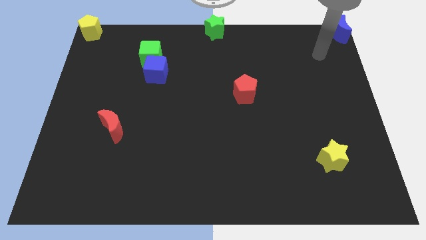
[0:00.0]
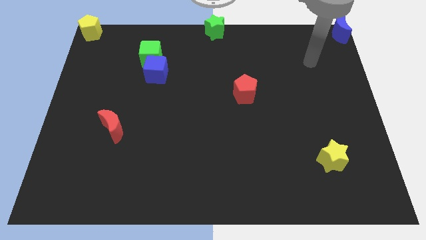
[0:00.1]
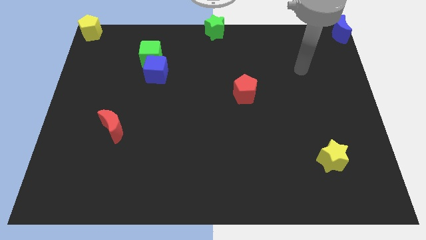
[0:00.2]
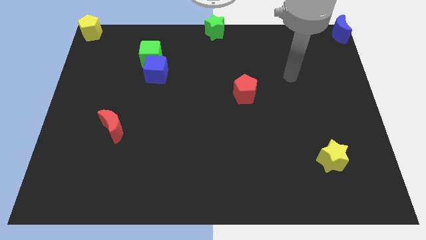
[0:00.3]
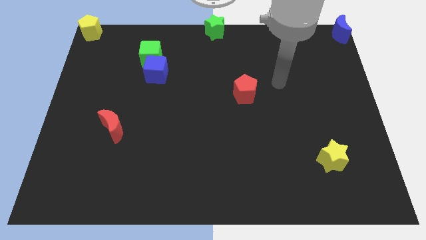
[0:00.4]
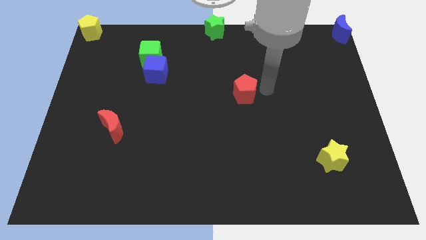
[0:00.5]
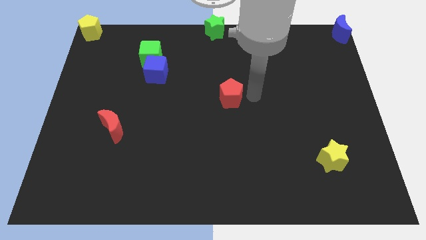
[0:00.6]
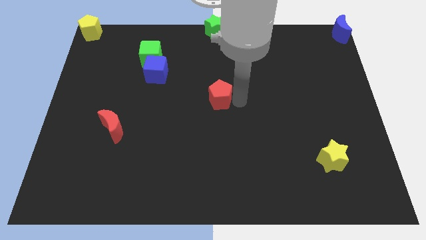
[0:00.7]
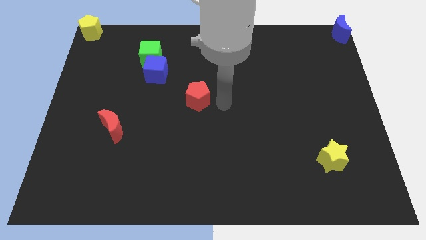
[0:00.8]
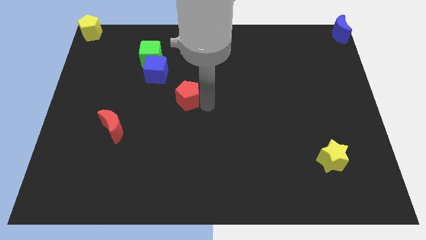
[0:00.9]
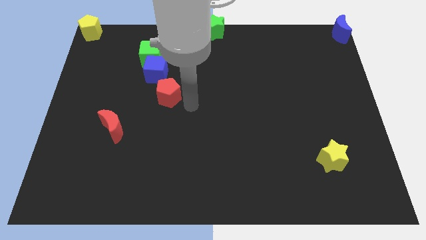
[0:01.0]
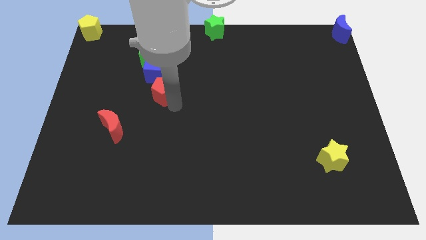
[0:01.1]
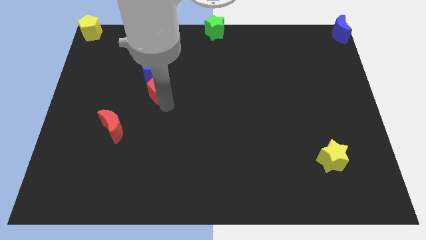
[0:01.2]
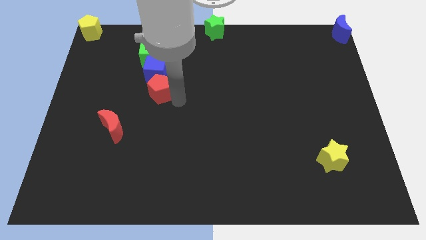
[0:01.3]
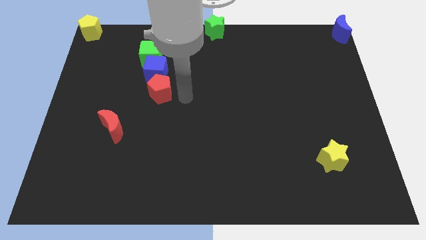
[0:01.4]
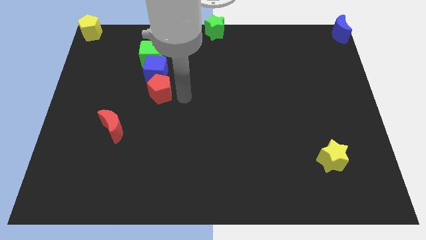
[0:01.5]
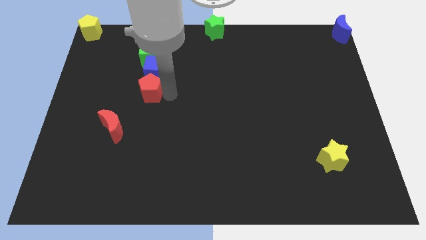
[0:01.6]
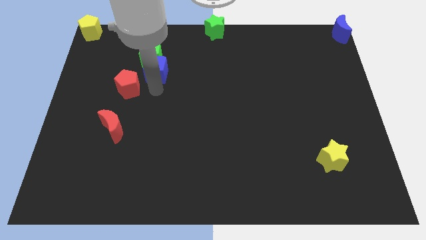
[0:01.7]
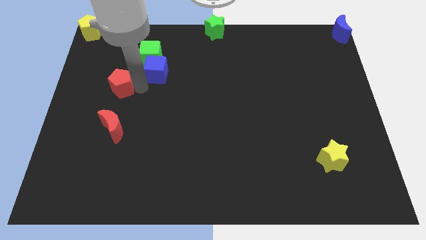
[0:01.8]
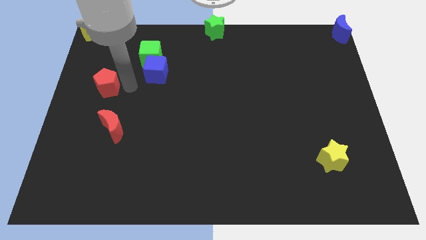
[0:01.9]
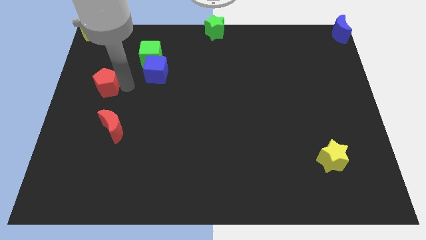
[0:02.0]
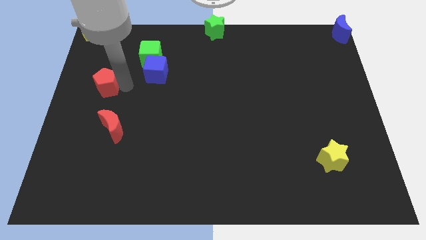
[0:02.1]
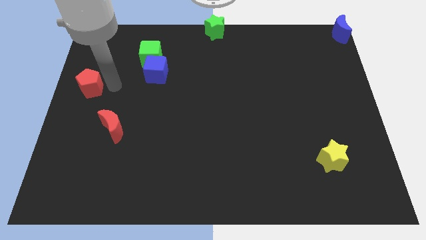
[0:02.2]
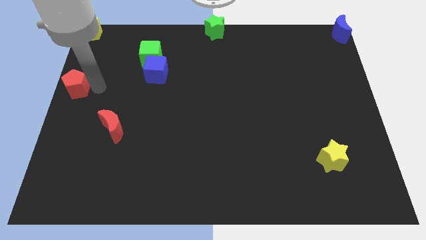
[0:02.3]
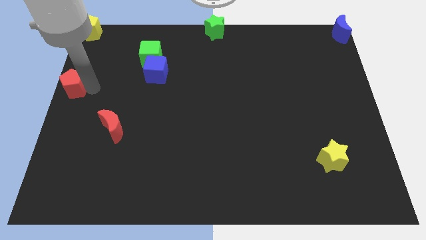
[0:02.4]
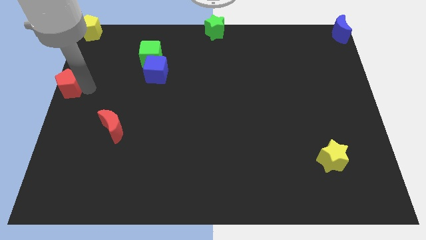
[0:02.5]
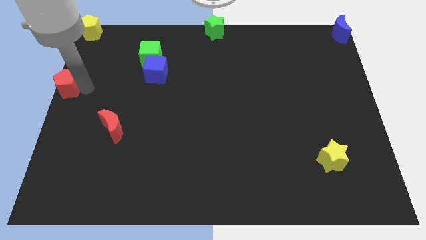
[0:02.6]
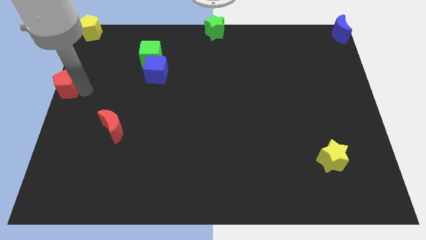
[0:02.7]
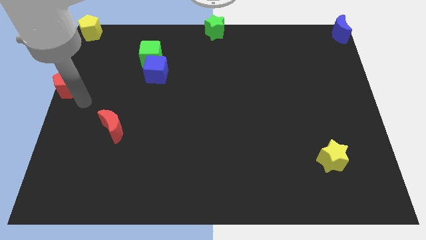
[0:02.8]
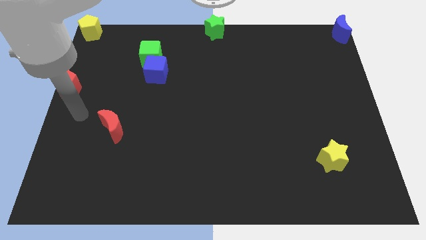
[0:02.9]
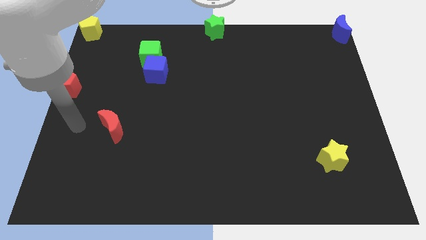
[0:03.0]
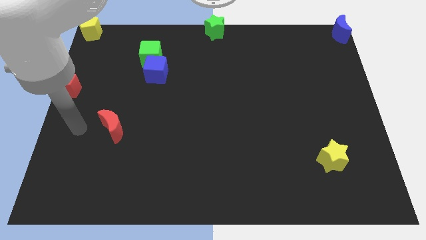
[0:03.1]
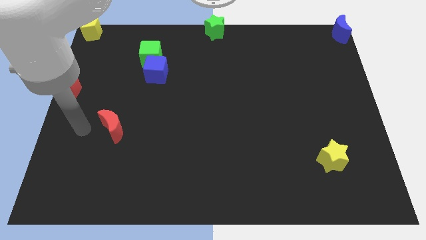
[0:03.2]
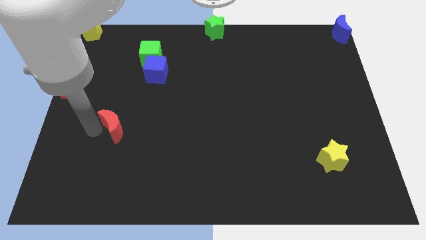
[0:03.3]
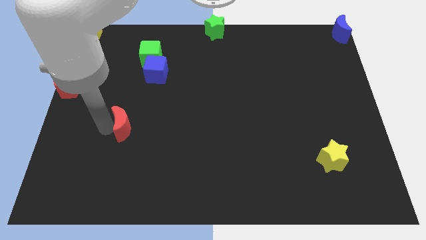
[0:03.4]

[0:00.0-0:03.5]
push the red pentagon to the center left

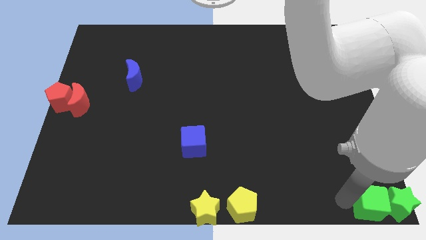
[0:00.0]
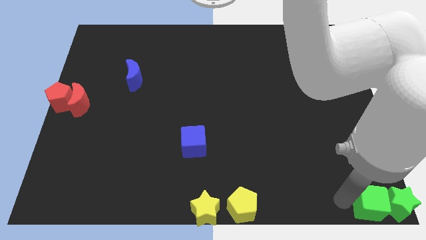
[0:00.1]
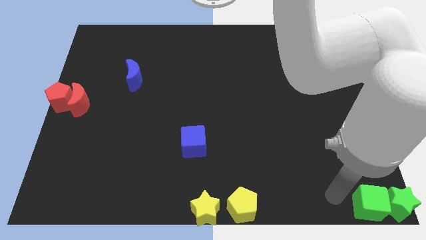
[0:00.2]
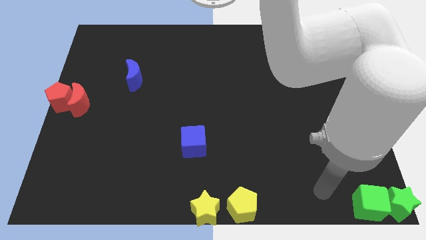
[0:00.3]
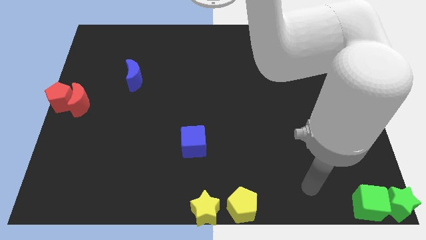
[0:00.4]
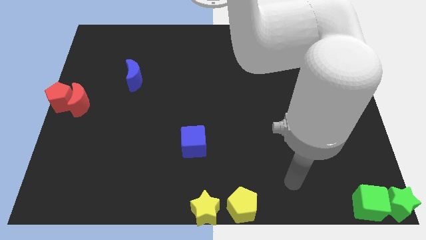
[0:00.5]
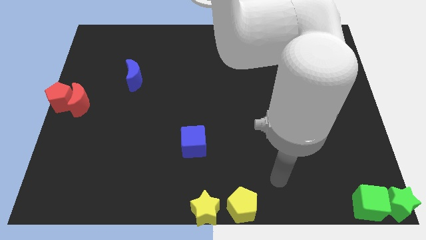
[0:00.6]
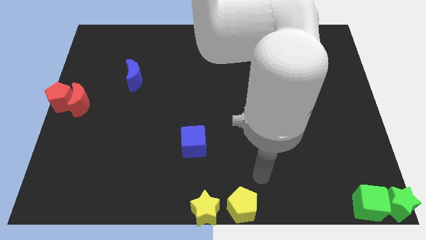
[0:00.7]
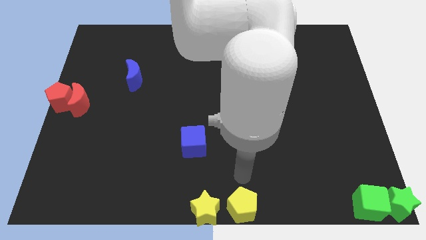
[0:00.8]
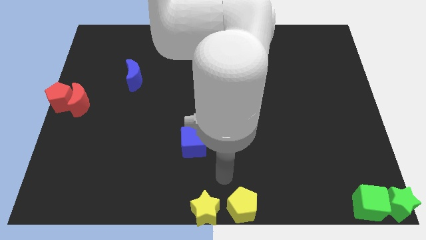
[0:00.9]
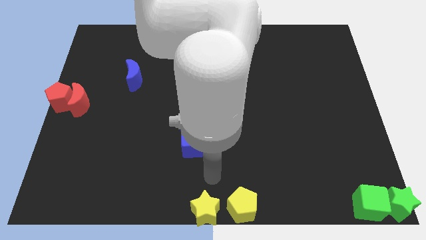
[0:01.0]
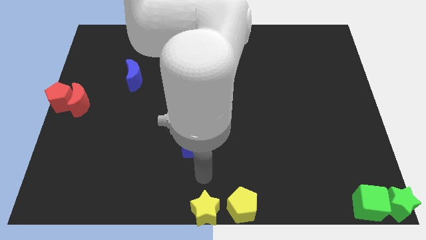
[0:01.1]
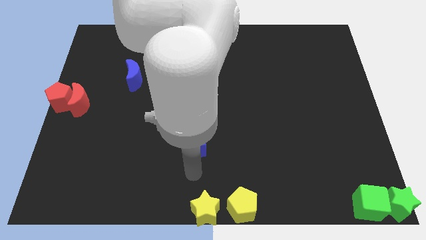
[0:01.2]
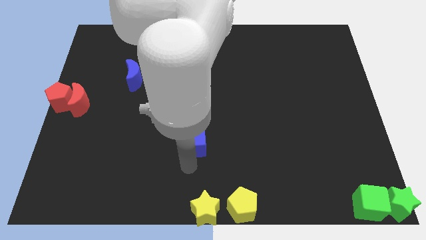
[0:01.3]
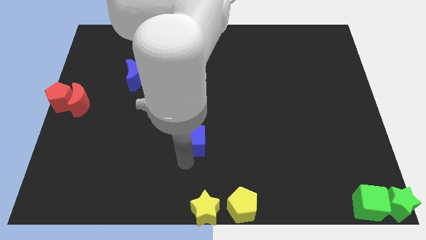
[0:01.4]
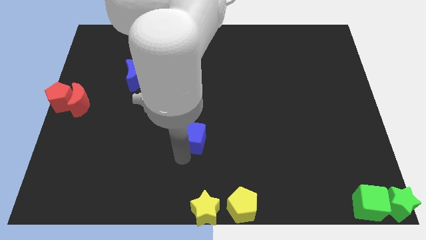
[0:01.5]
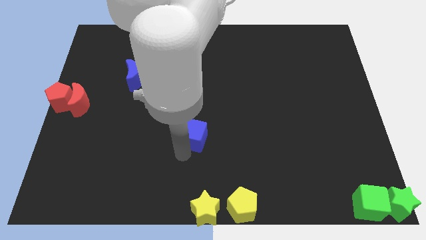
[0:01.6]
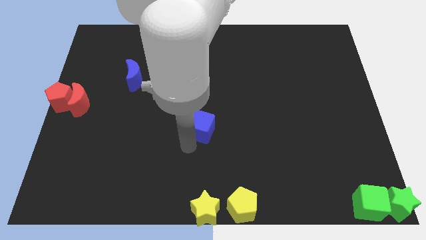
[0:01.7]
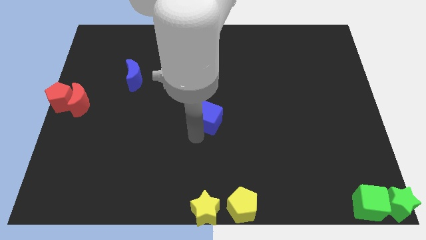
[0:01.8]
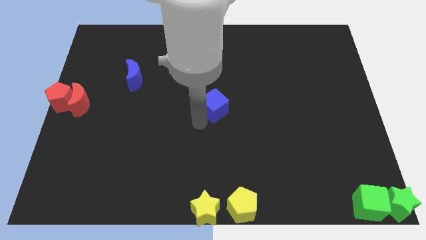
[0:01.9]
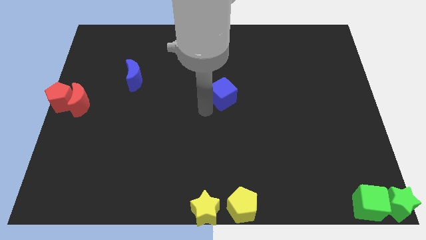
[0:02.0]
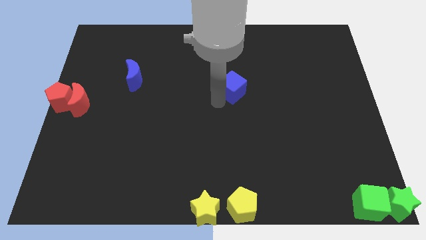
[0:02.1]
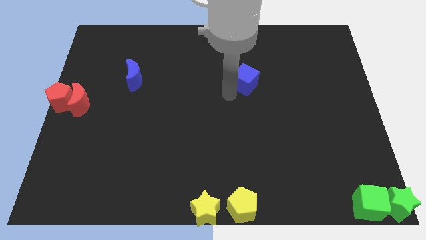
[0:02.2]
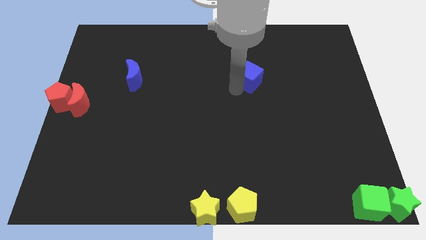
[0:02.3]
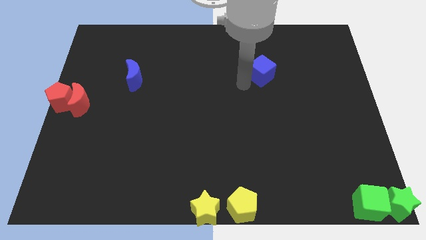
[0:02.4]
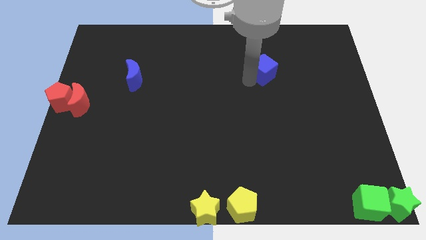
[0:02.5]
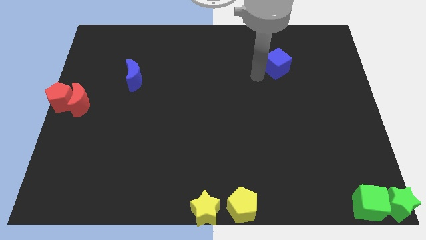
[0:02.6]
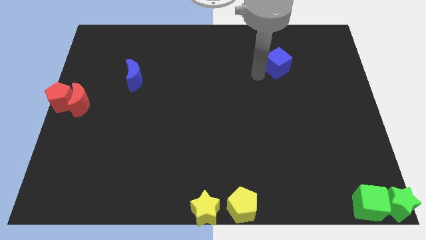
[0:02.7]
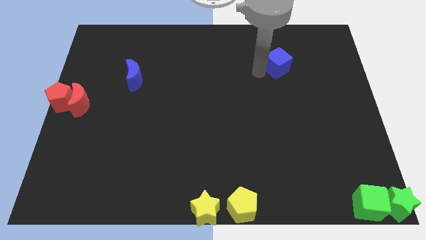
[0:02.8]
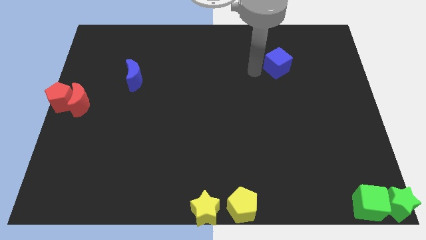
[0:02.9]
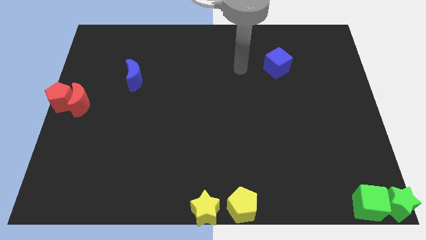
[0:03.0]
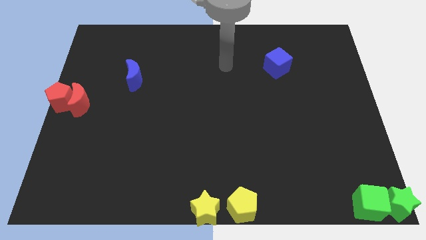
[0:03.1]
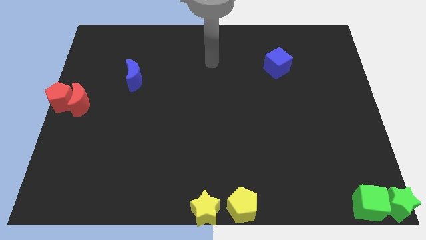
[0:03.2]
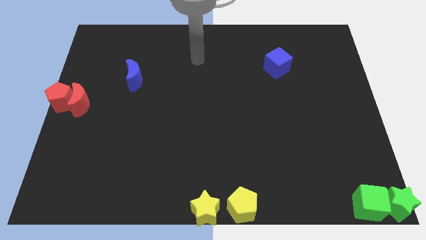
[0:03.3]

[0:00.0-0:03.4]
move the blue cube to the top side of the table

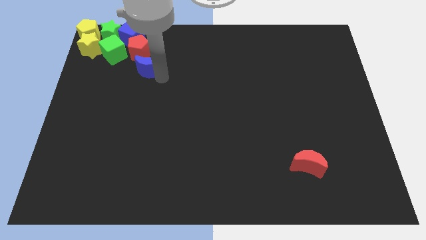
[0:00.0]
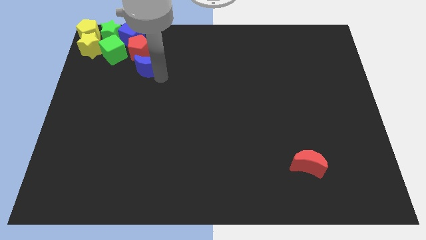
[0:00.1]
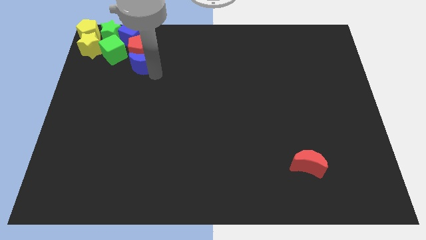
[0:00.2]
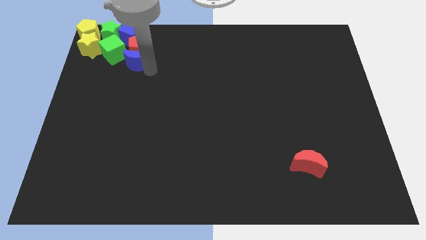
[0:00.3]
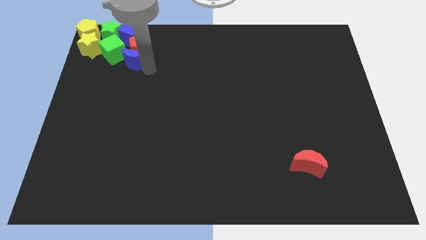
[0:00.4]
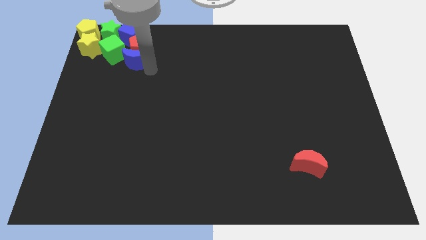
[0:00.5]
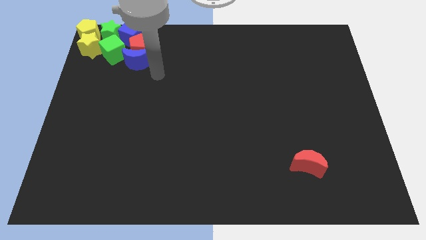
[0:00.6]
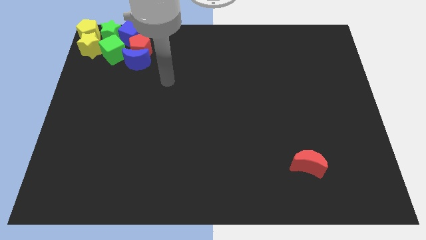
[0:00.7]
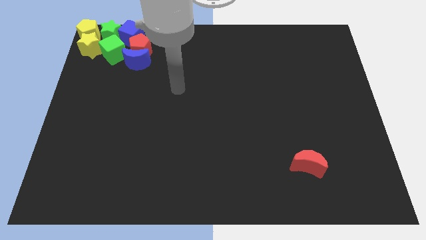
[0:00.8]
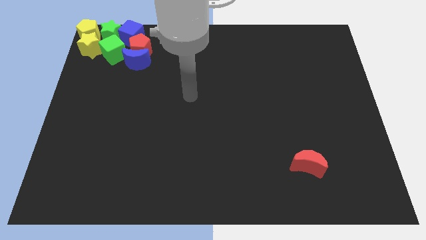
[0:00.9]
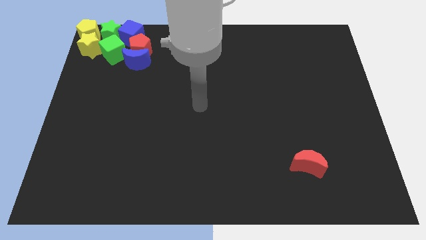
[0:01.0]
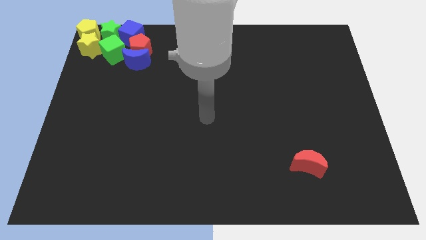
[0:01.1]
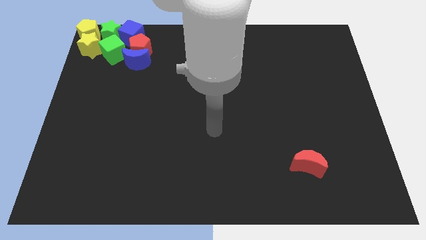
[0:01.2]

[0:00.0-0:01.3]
push the blue crescent into the red pentagon

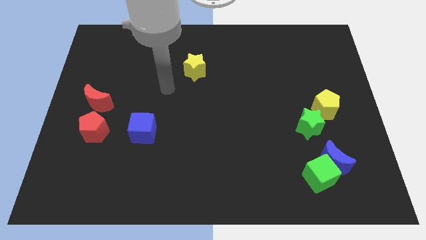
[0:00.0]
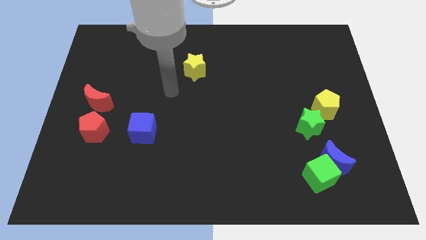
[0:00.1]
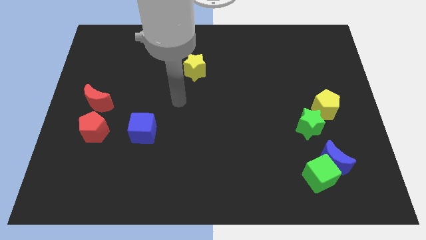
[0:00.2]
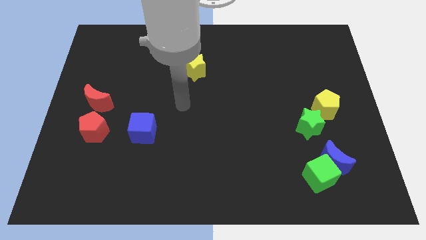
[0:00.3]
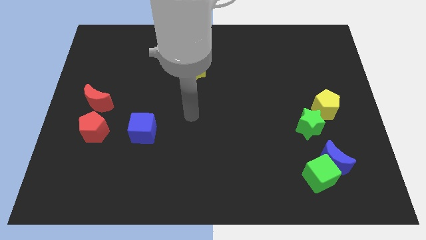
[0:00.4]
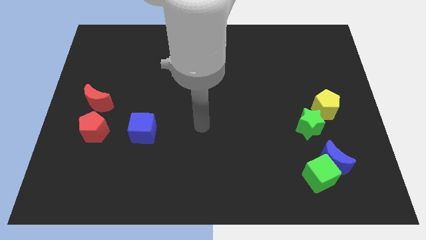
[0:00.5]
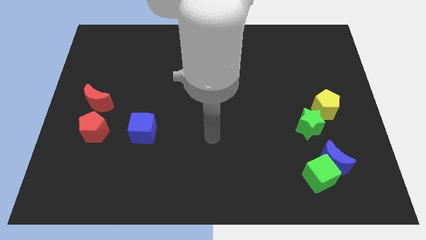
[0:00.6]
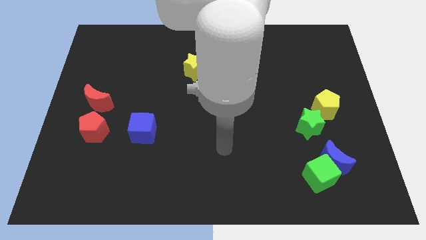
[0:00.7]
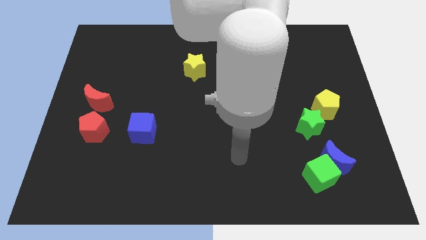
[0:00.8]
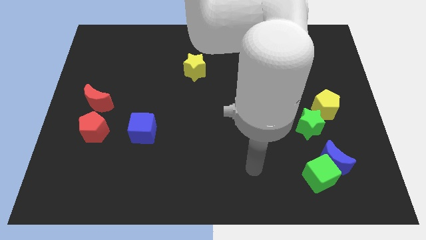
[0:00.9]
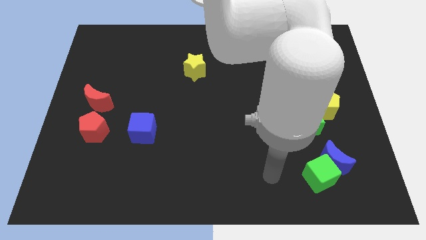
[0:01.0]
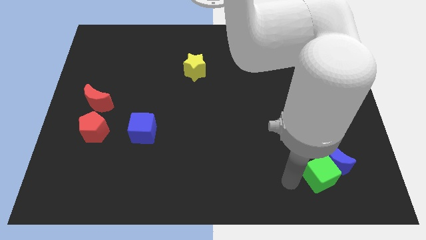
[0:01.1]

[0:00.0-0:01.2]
move your arm left to the green cube
